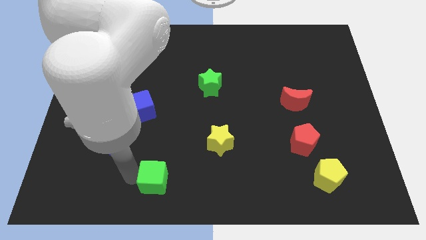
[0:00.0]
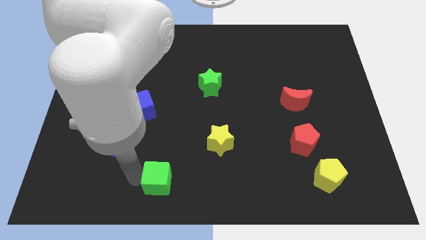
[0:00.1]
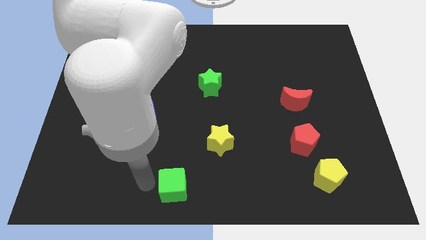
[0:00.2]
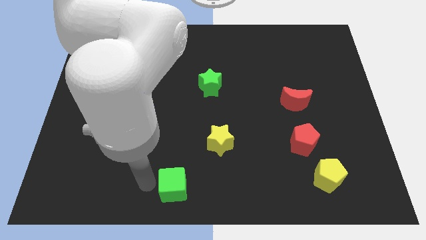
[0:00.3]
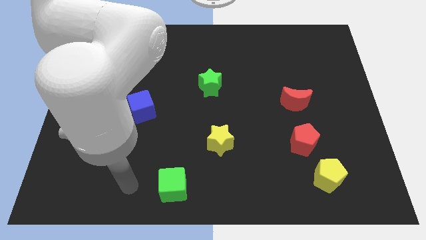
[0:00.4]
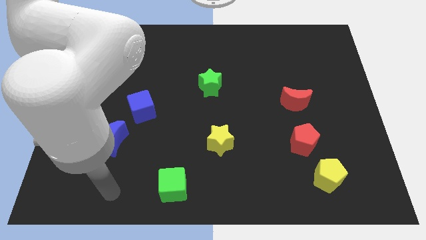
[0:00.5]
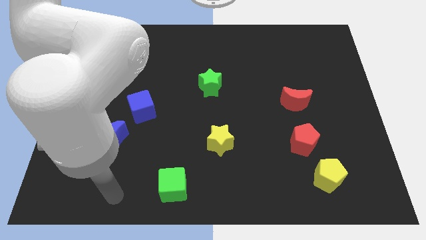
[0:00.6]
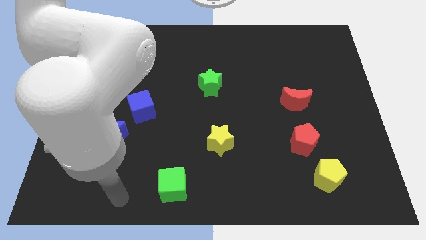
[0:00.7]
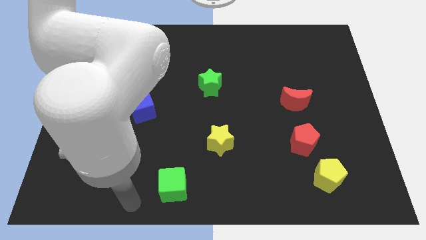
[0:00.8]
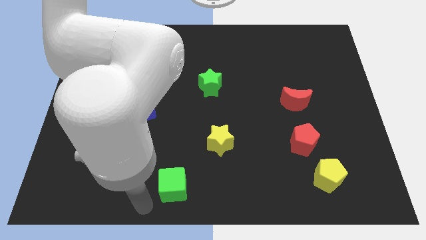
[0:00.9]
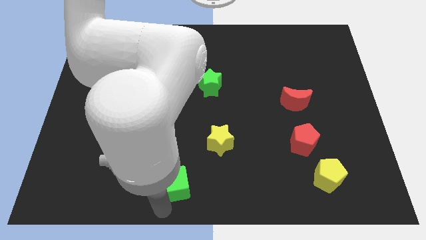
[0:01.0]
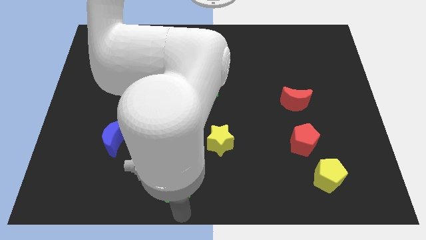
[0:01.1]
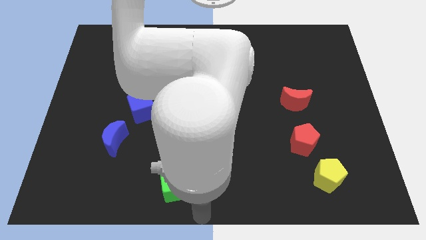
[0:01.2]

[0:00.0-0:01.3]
slide the green cube to the bottom of the board

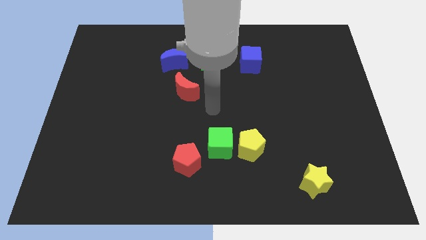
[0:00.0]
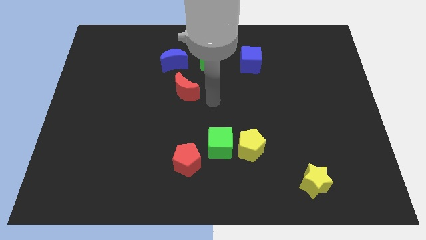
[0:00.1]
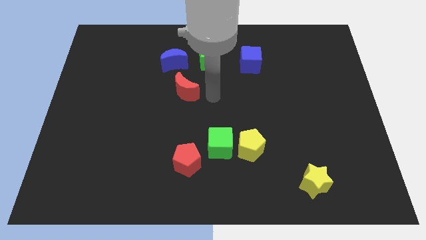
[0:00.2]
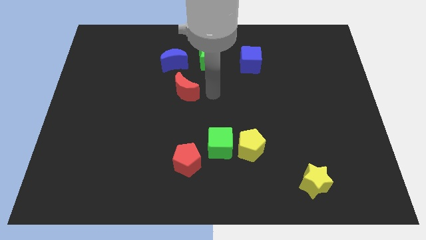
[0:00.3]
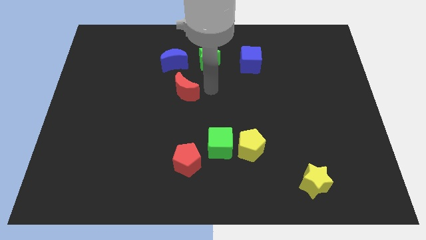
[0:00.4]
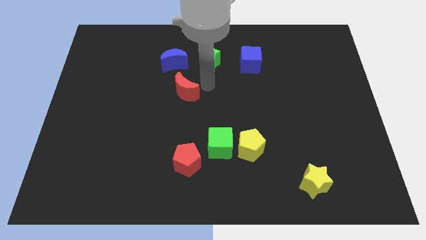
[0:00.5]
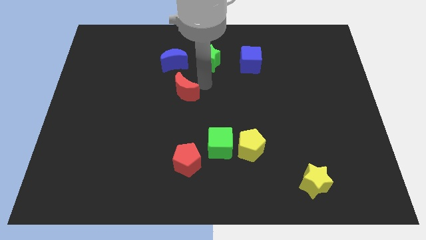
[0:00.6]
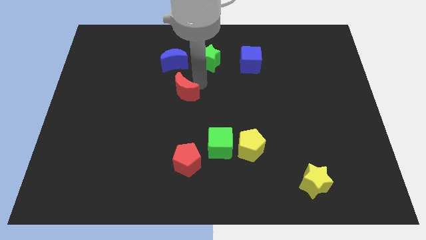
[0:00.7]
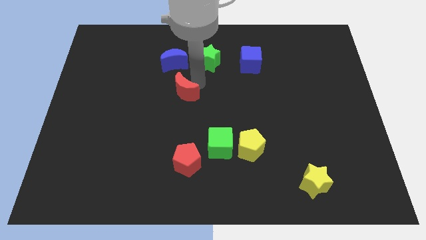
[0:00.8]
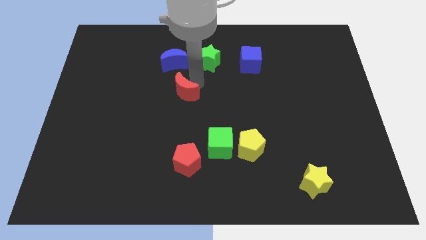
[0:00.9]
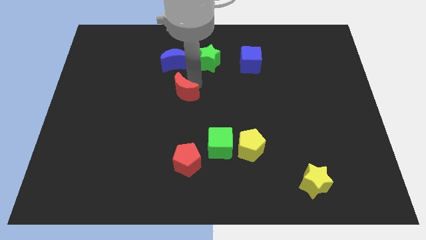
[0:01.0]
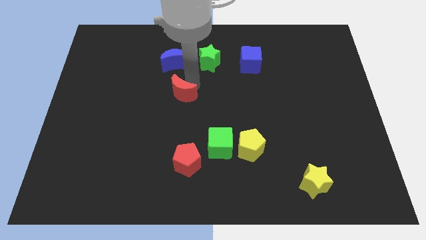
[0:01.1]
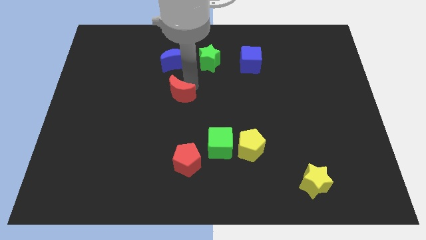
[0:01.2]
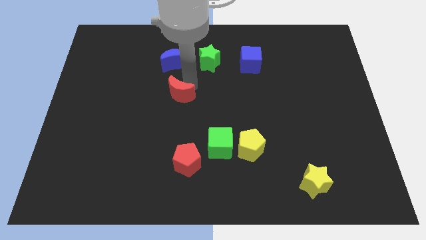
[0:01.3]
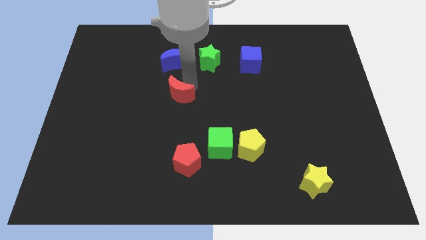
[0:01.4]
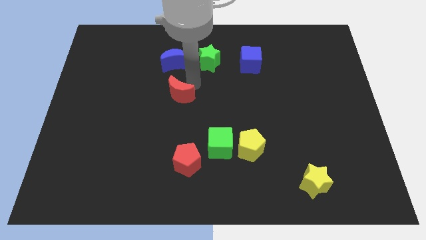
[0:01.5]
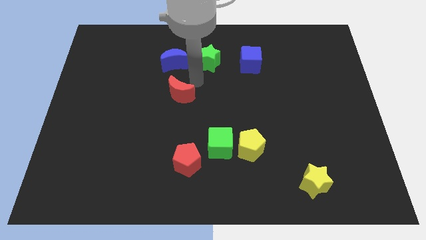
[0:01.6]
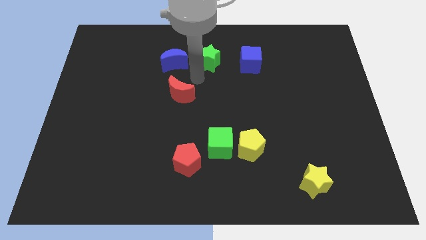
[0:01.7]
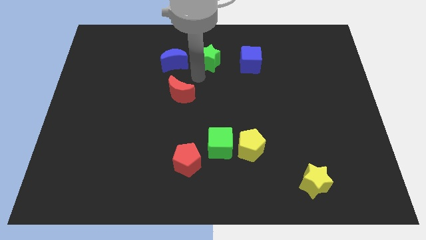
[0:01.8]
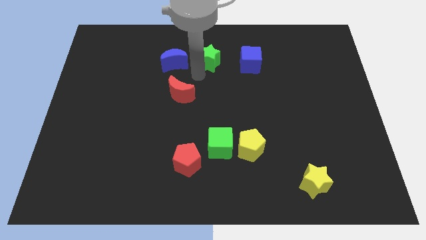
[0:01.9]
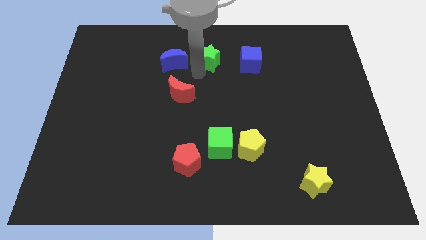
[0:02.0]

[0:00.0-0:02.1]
place the red crescent below the blue moon

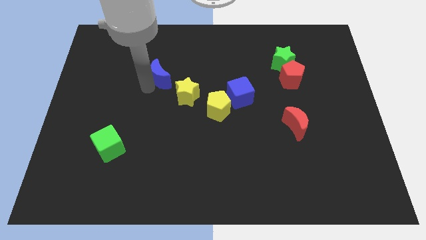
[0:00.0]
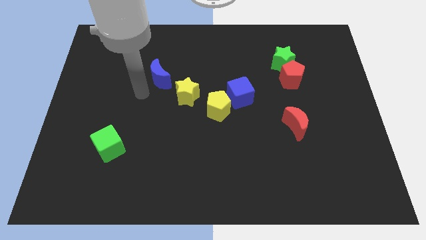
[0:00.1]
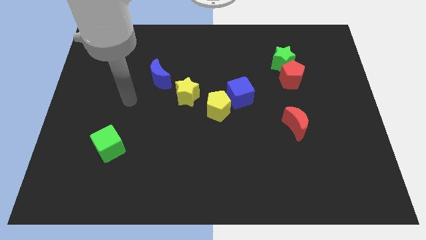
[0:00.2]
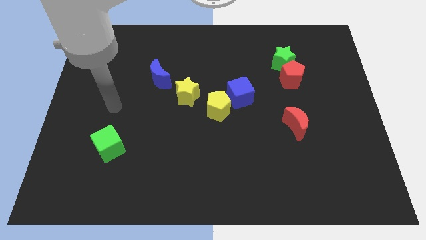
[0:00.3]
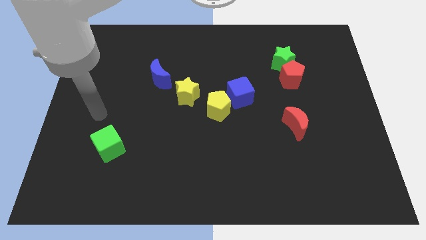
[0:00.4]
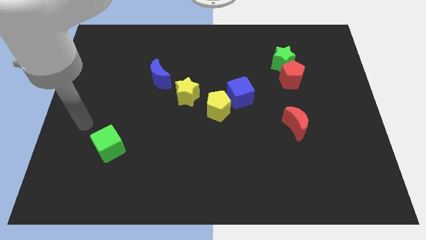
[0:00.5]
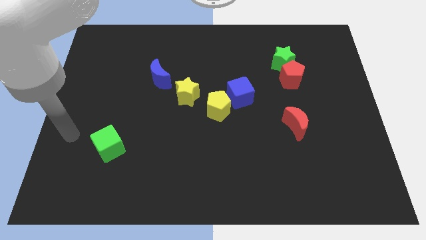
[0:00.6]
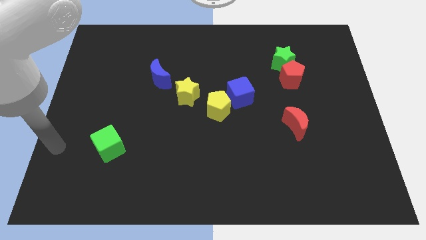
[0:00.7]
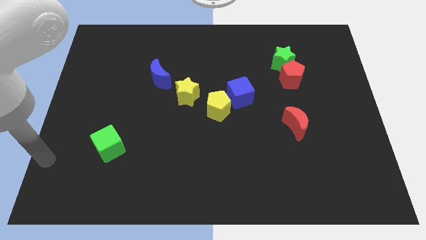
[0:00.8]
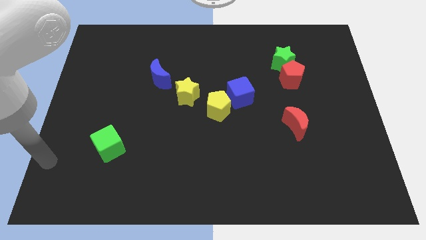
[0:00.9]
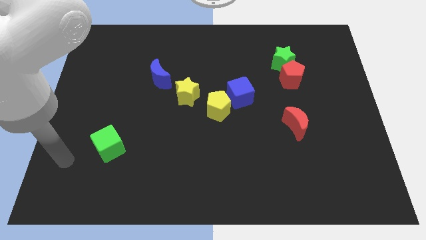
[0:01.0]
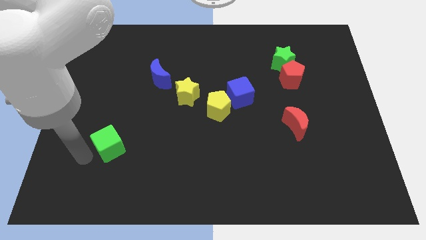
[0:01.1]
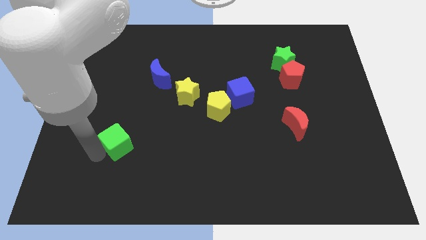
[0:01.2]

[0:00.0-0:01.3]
place the arm near the green cube

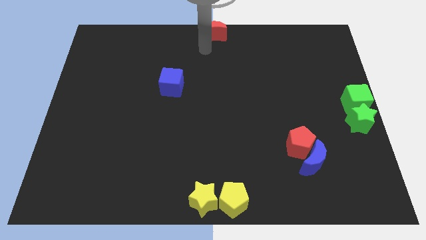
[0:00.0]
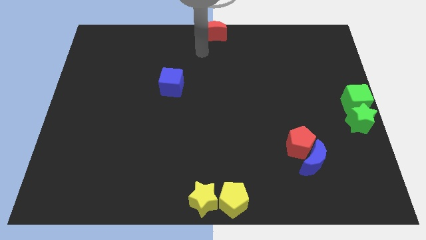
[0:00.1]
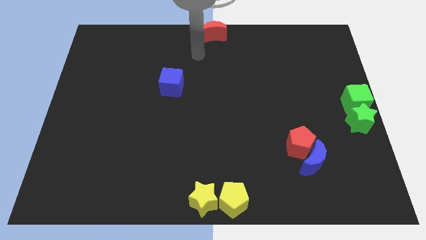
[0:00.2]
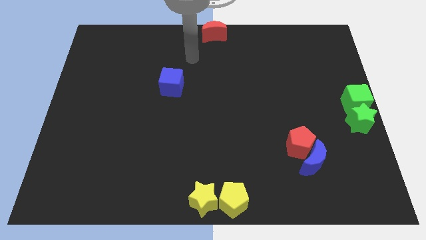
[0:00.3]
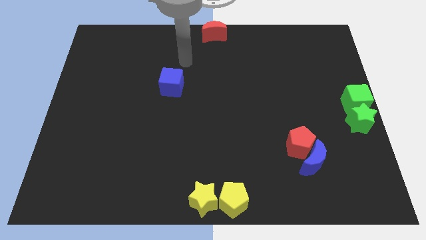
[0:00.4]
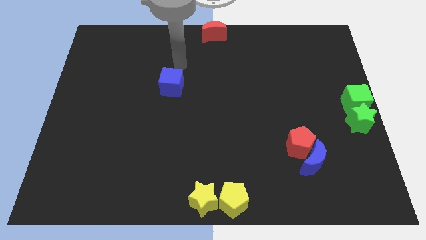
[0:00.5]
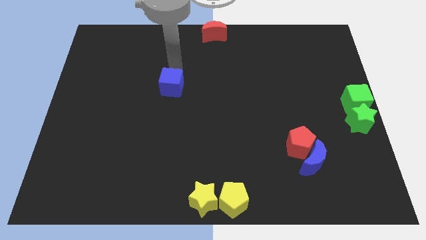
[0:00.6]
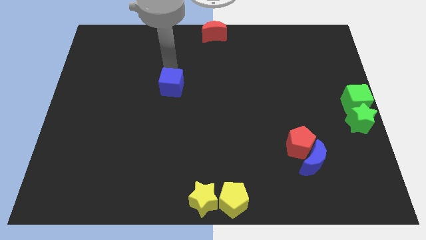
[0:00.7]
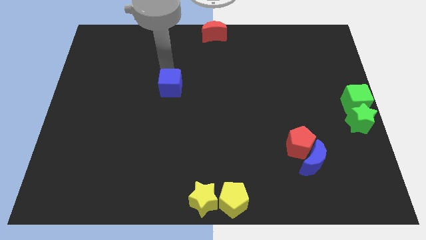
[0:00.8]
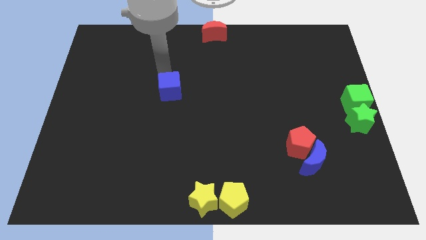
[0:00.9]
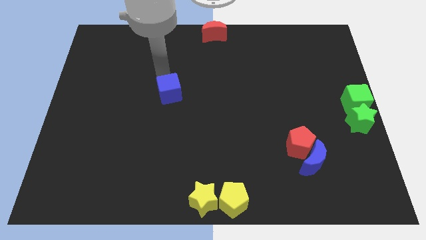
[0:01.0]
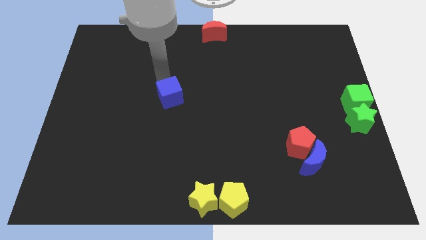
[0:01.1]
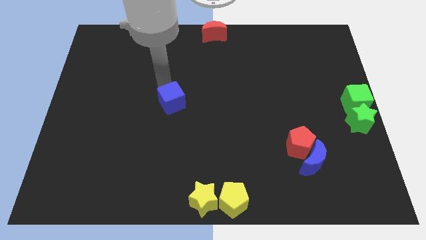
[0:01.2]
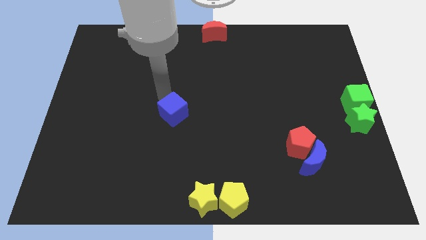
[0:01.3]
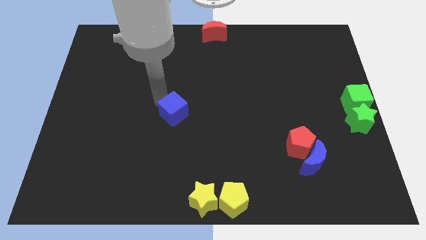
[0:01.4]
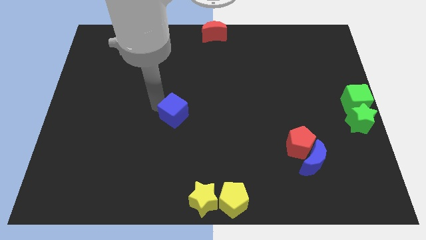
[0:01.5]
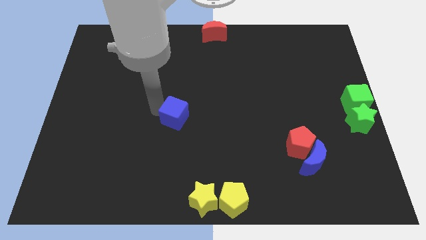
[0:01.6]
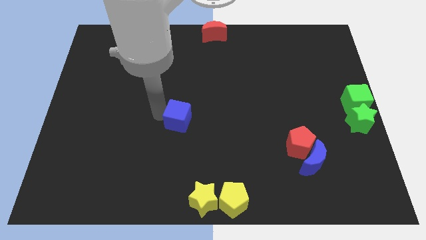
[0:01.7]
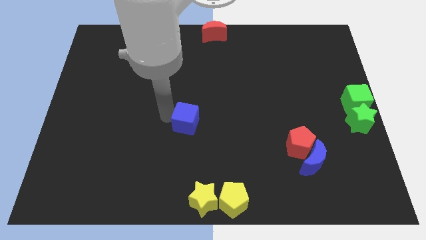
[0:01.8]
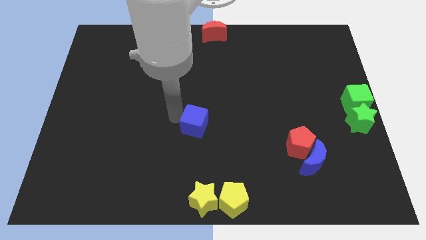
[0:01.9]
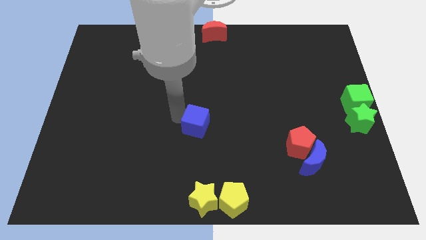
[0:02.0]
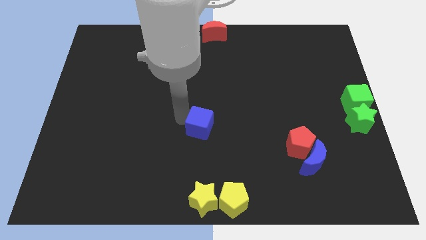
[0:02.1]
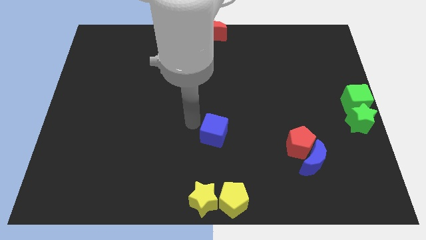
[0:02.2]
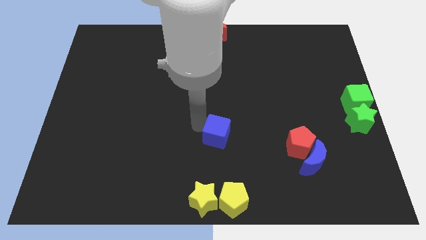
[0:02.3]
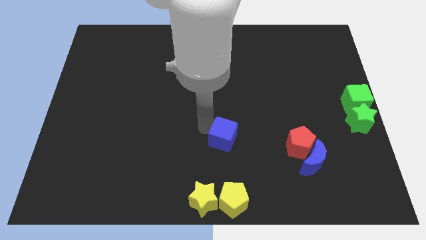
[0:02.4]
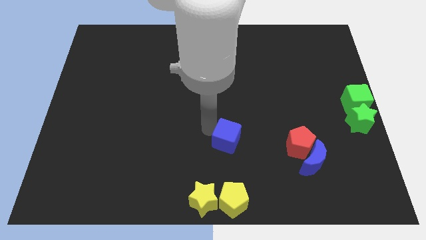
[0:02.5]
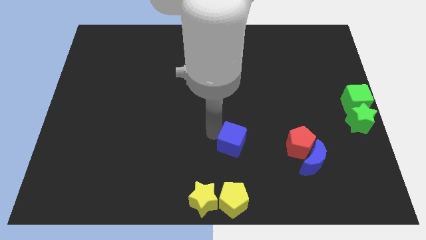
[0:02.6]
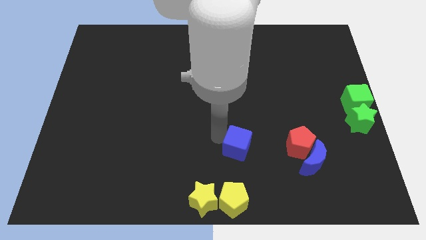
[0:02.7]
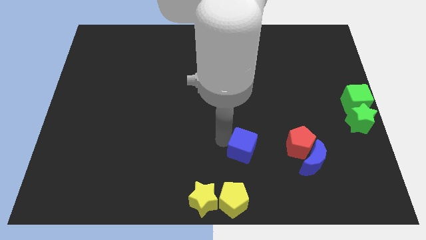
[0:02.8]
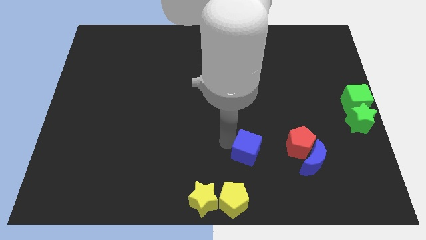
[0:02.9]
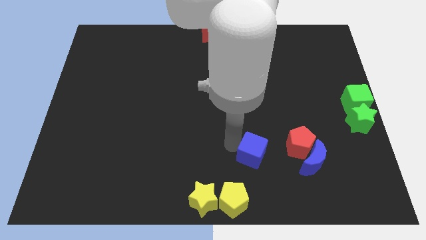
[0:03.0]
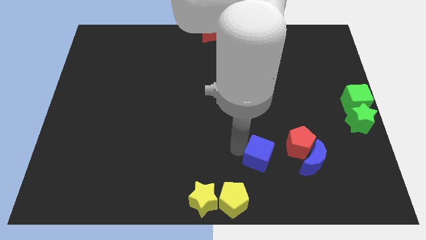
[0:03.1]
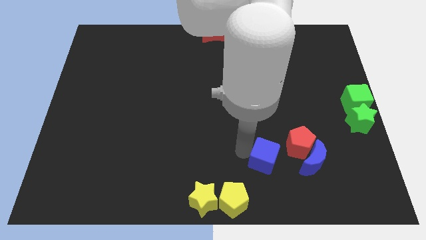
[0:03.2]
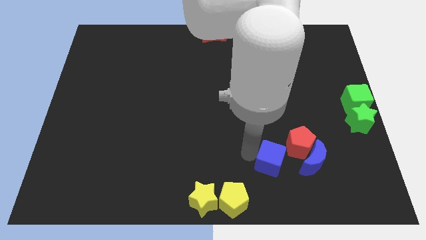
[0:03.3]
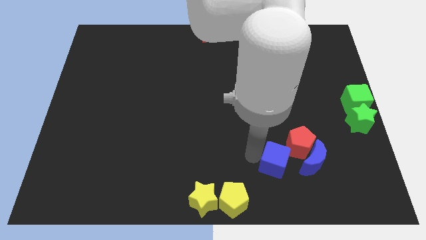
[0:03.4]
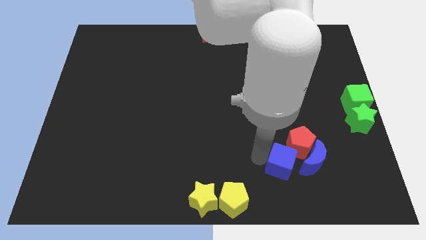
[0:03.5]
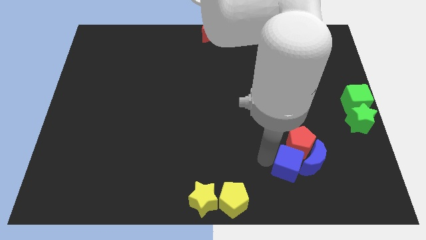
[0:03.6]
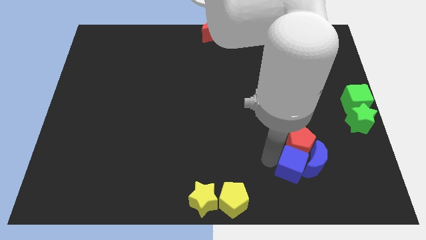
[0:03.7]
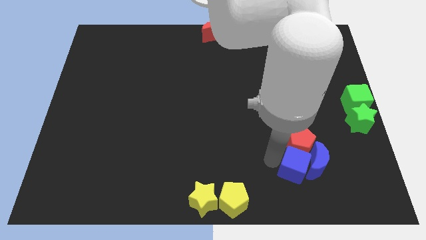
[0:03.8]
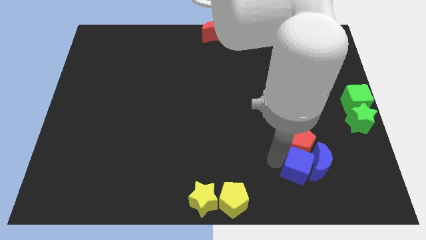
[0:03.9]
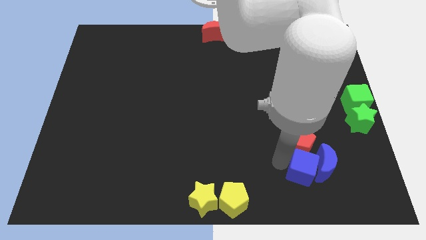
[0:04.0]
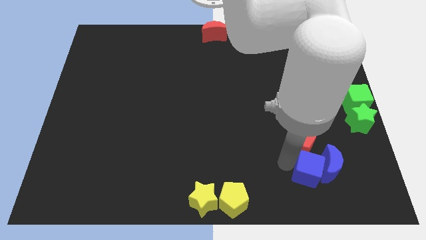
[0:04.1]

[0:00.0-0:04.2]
push the blue cube into the blue moon
